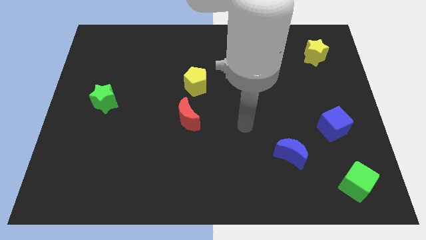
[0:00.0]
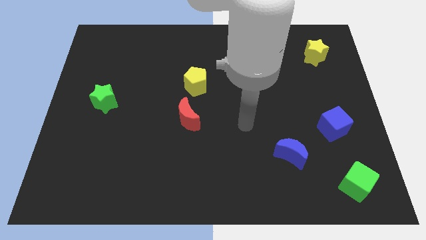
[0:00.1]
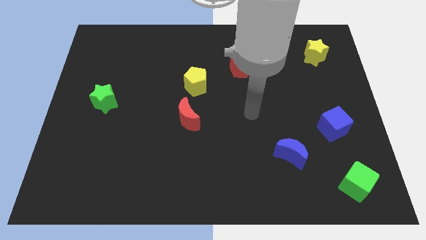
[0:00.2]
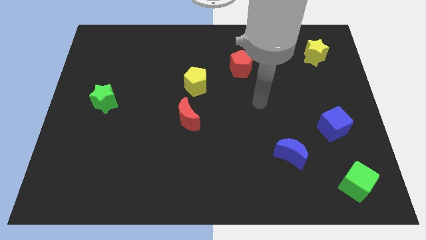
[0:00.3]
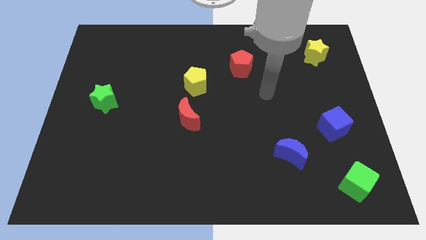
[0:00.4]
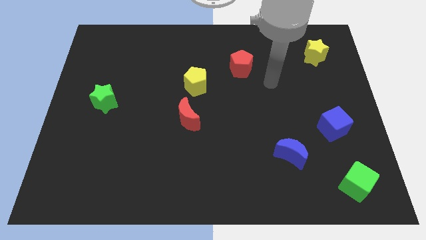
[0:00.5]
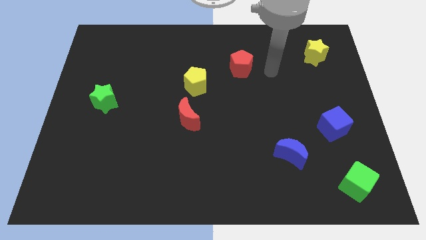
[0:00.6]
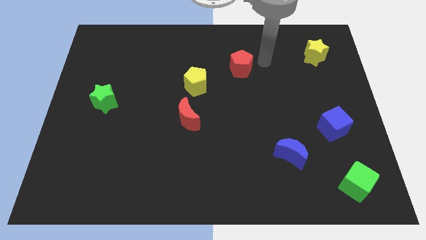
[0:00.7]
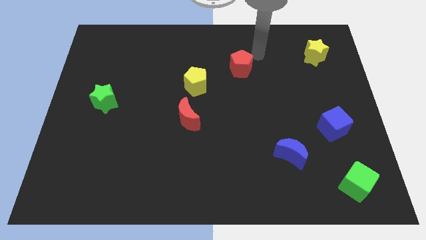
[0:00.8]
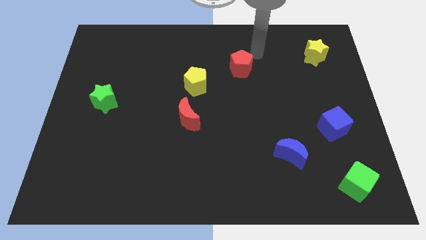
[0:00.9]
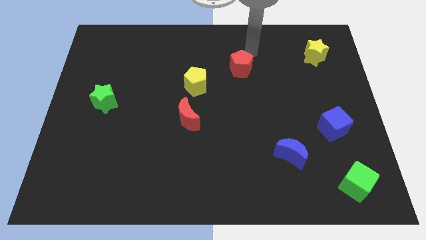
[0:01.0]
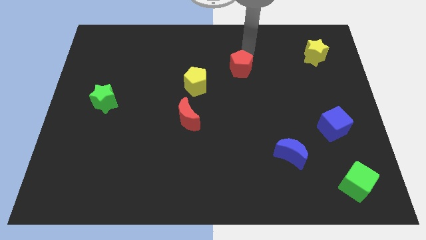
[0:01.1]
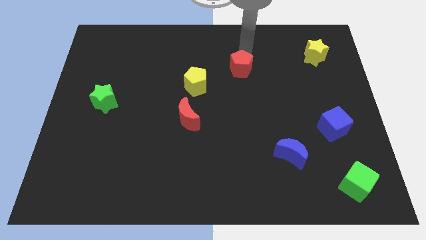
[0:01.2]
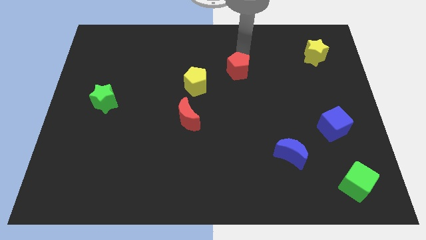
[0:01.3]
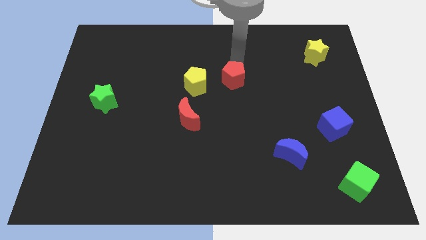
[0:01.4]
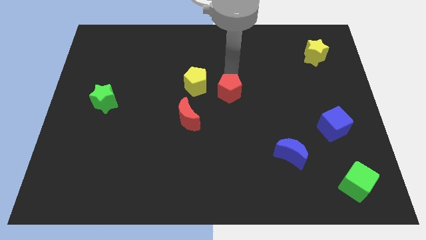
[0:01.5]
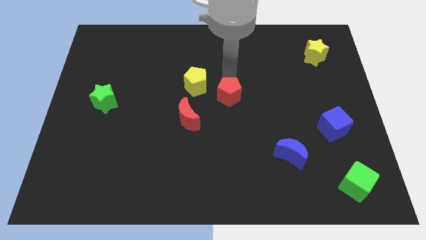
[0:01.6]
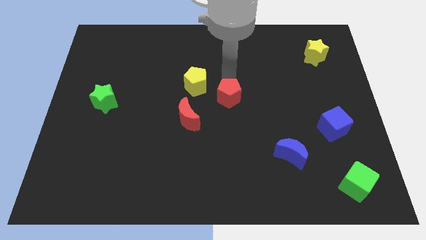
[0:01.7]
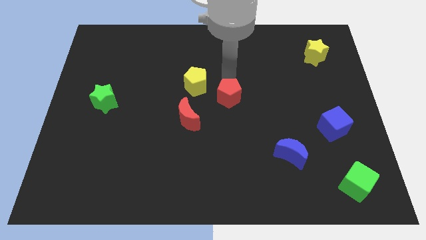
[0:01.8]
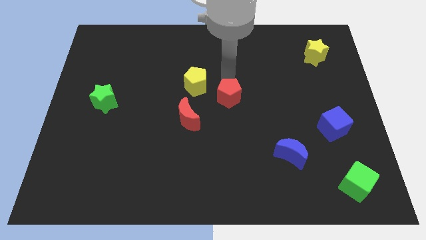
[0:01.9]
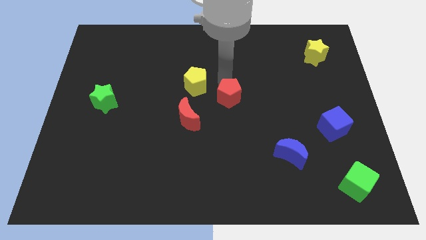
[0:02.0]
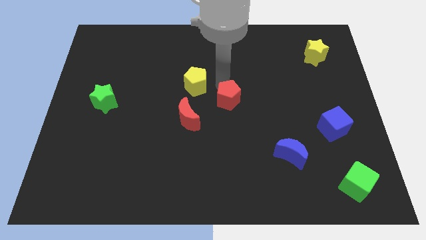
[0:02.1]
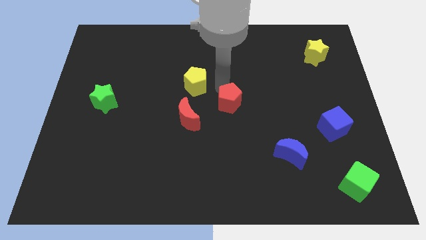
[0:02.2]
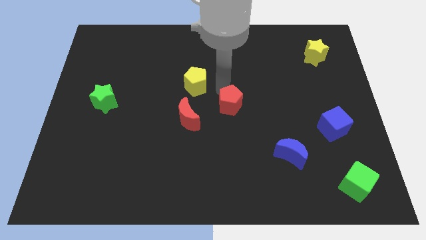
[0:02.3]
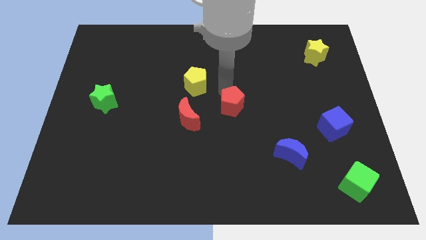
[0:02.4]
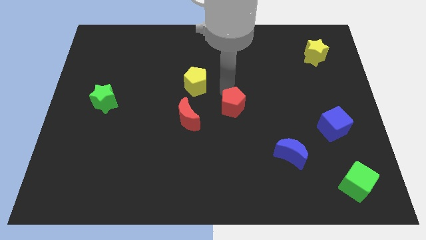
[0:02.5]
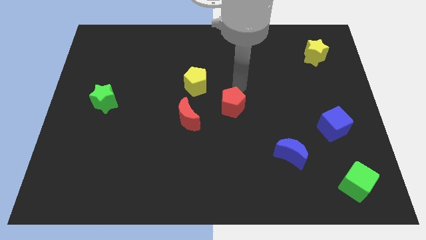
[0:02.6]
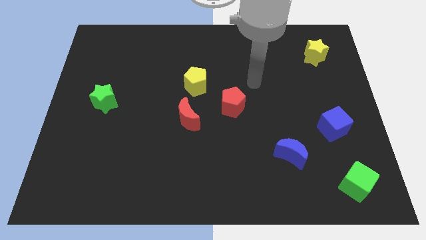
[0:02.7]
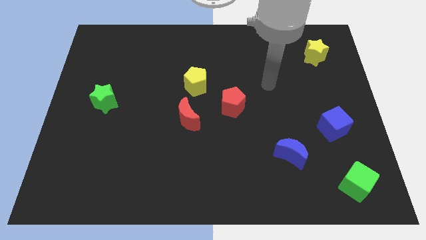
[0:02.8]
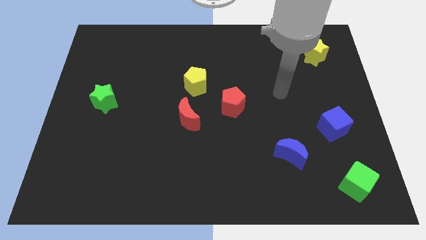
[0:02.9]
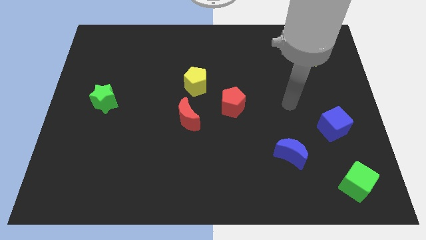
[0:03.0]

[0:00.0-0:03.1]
push the red pentagon towards the center of the board

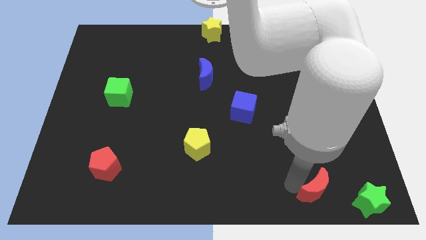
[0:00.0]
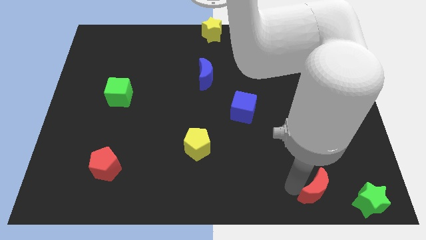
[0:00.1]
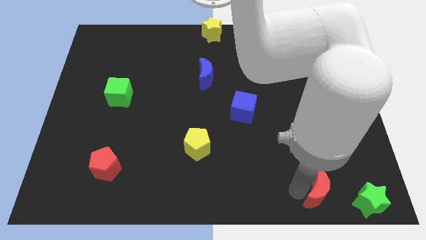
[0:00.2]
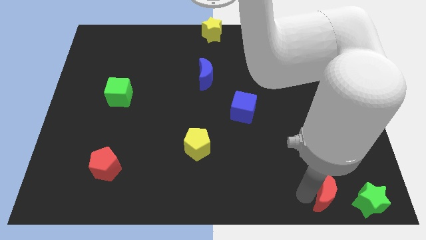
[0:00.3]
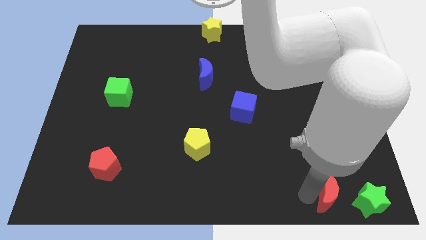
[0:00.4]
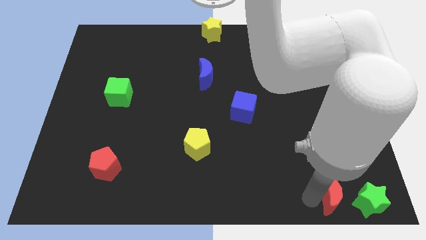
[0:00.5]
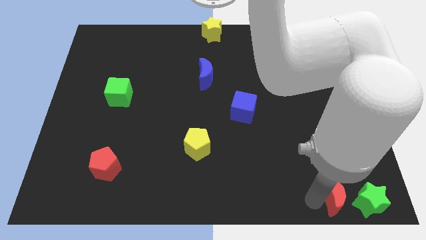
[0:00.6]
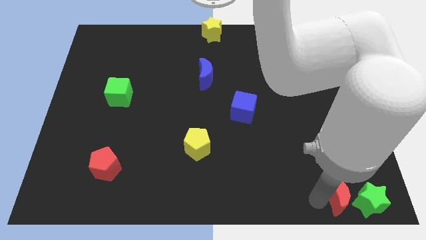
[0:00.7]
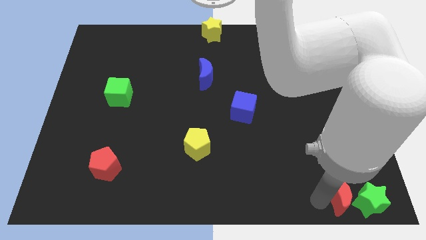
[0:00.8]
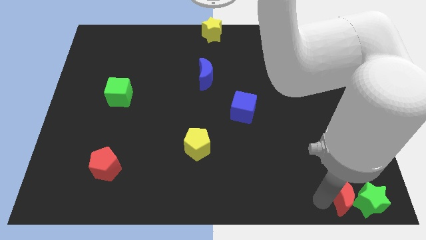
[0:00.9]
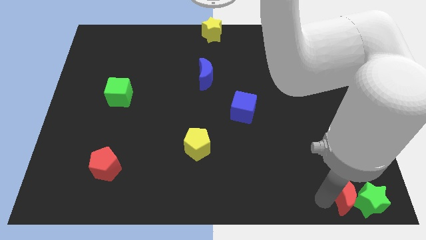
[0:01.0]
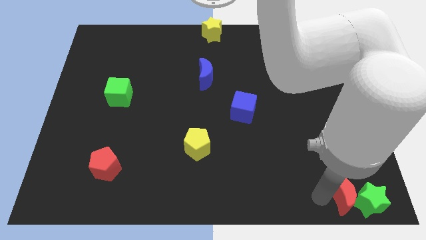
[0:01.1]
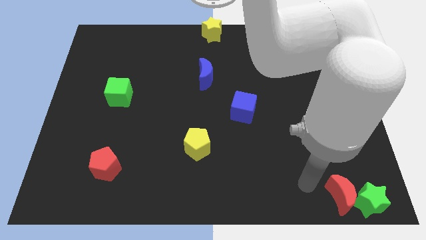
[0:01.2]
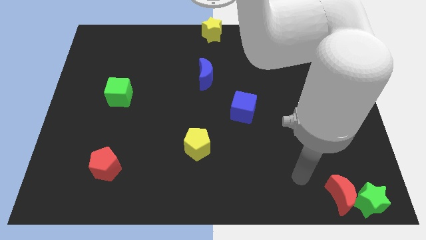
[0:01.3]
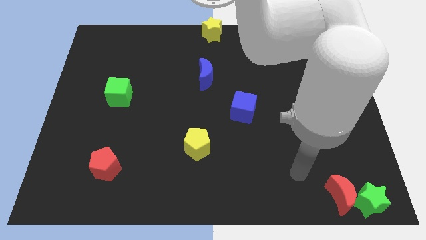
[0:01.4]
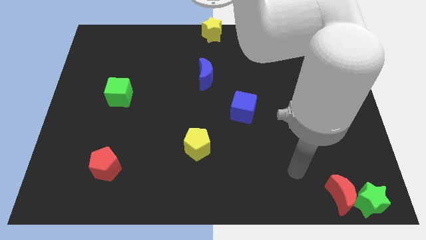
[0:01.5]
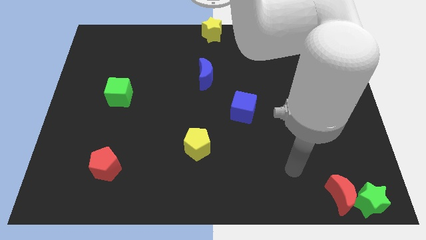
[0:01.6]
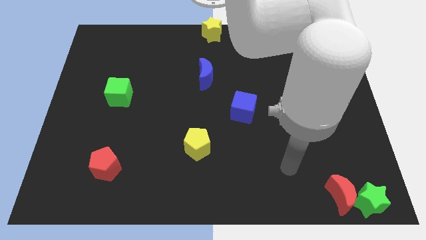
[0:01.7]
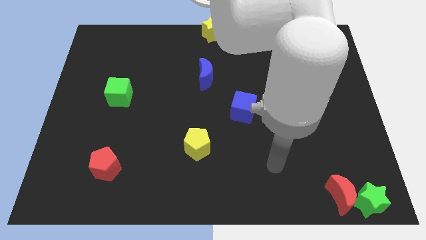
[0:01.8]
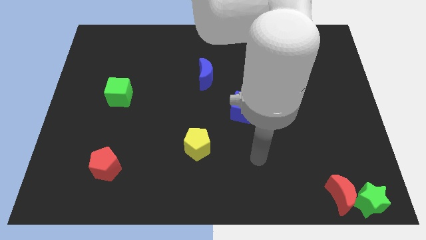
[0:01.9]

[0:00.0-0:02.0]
push the red crescent towards the green star

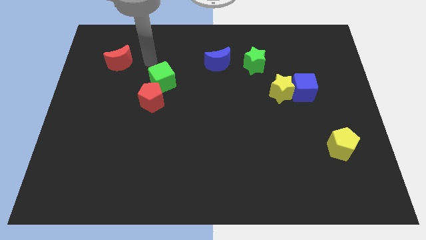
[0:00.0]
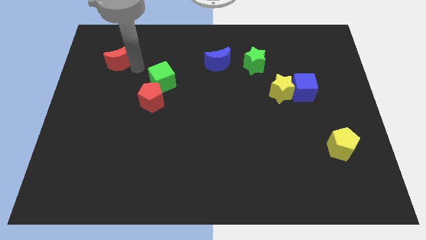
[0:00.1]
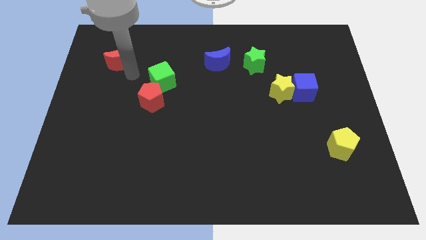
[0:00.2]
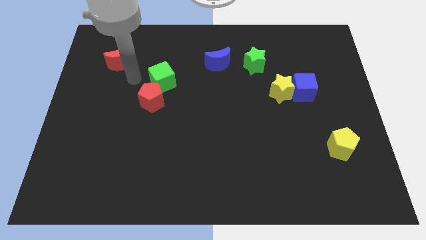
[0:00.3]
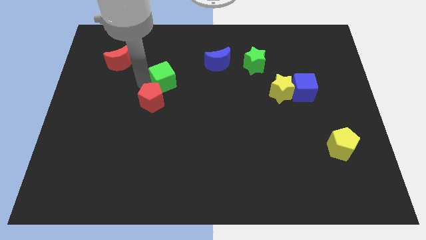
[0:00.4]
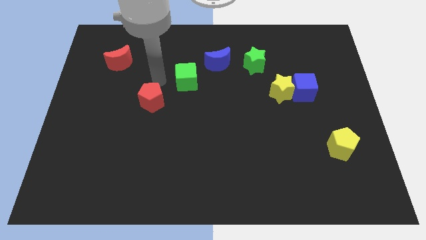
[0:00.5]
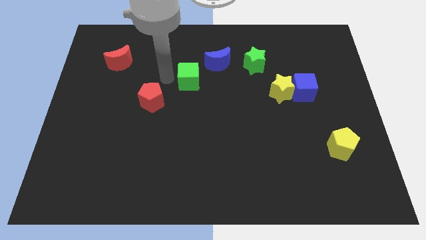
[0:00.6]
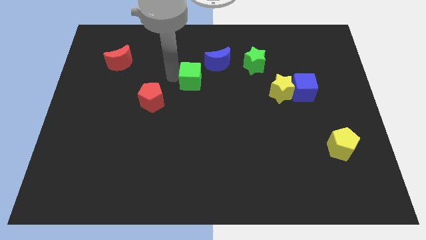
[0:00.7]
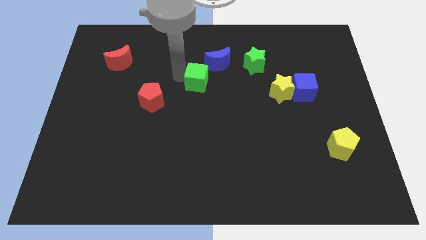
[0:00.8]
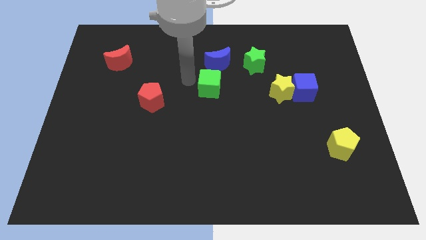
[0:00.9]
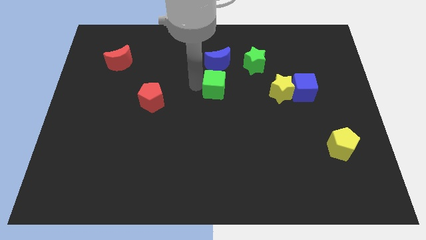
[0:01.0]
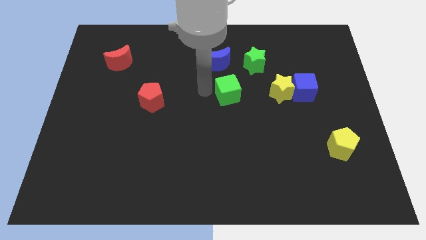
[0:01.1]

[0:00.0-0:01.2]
place the green cube underneath the blue moon

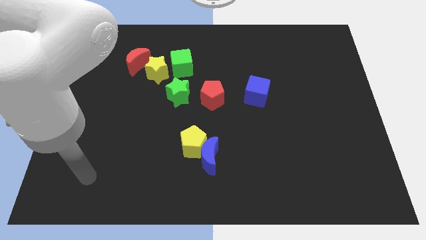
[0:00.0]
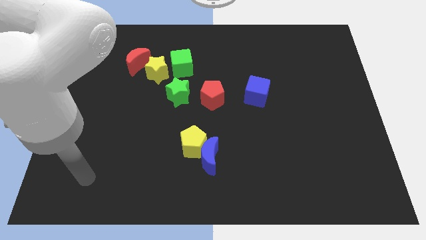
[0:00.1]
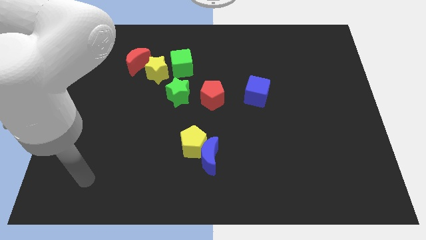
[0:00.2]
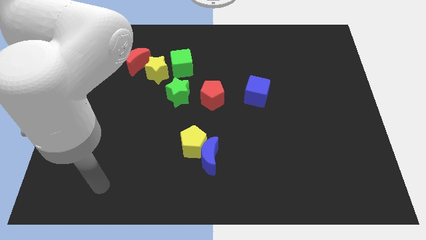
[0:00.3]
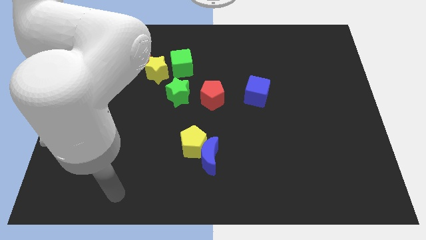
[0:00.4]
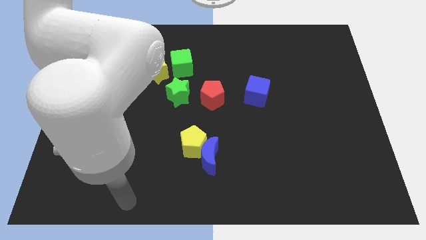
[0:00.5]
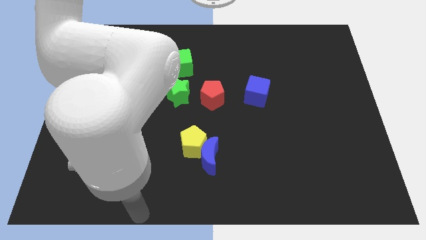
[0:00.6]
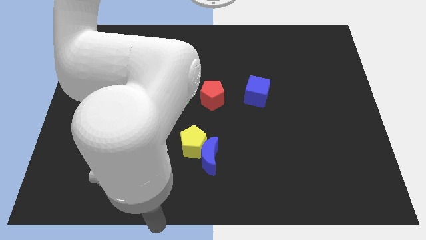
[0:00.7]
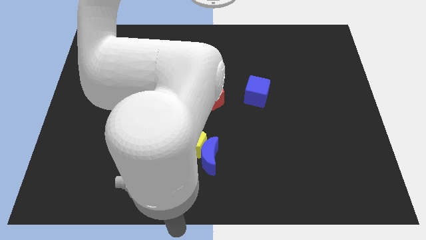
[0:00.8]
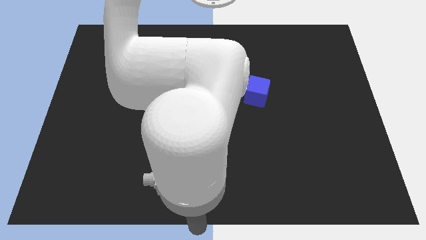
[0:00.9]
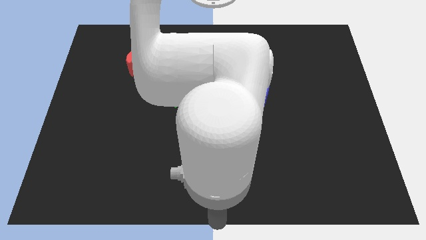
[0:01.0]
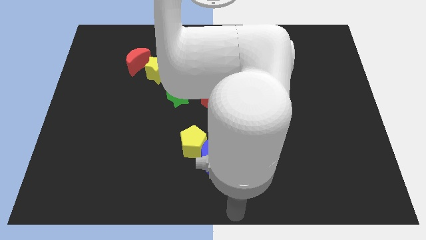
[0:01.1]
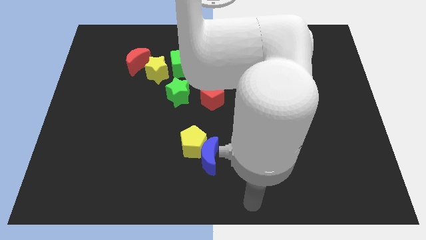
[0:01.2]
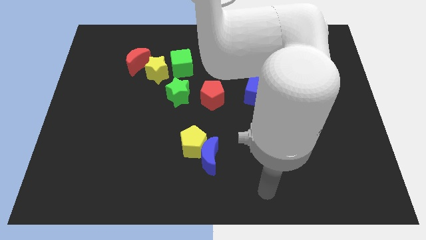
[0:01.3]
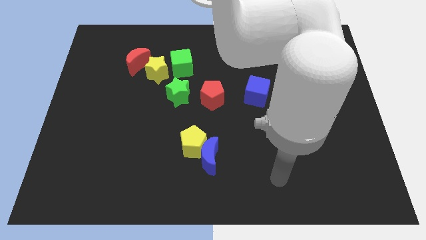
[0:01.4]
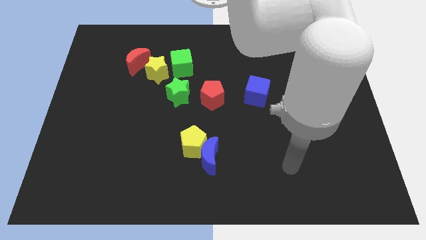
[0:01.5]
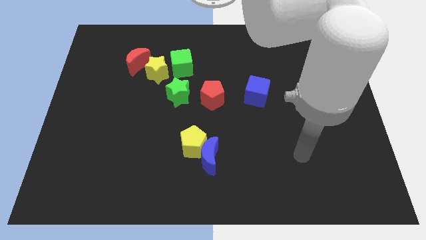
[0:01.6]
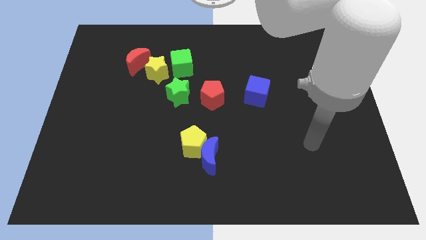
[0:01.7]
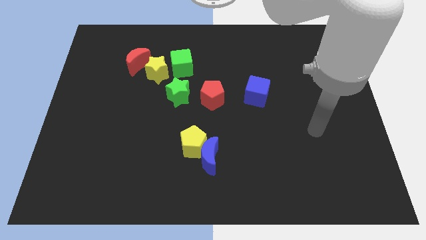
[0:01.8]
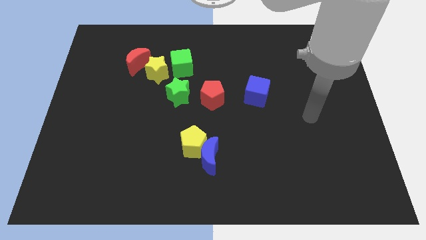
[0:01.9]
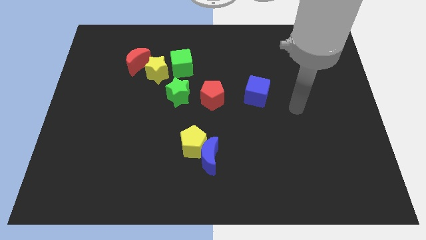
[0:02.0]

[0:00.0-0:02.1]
move your arm towards the right side of the blue cube

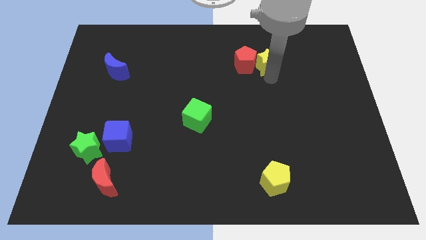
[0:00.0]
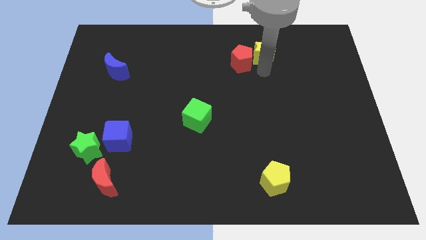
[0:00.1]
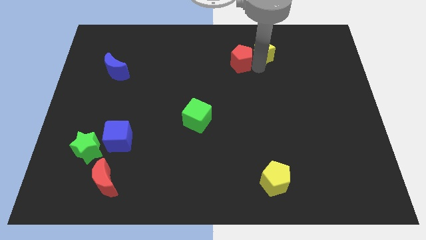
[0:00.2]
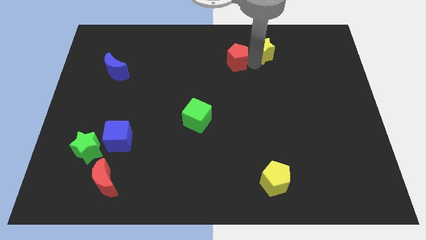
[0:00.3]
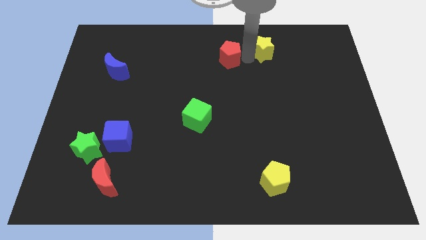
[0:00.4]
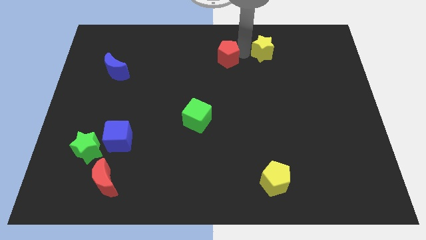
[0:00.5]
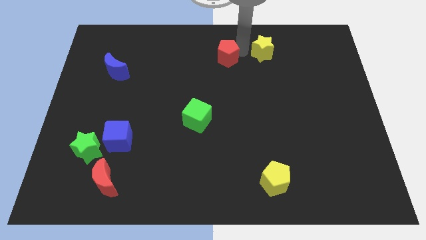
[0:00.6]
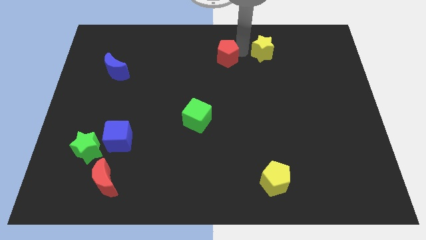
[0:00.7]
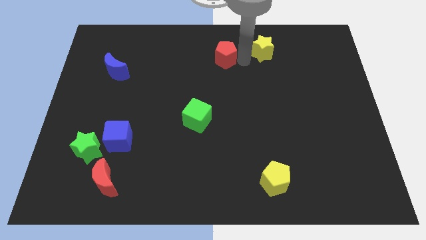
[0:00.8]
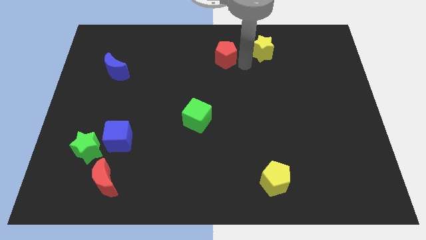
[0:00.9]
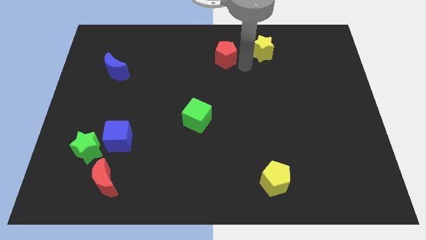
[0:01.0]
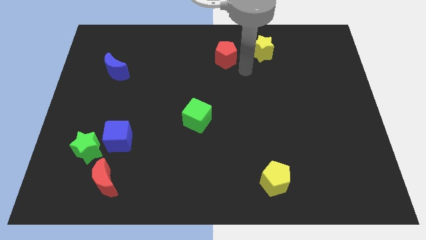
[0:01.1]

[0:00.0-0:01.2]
separate the red pentagon and the yellow star
